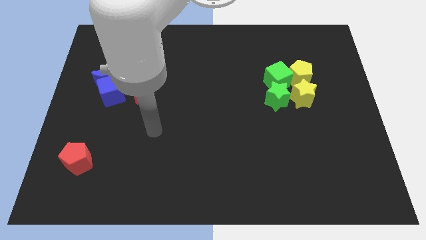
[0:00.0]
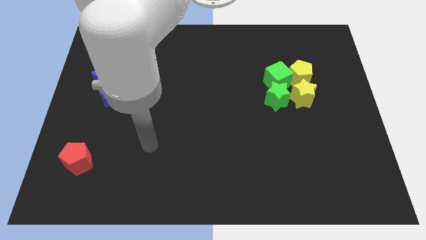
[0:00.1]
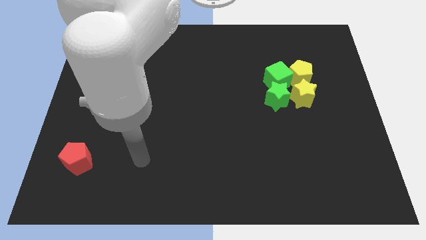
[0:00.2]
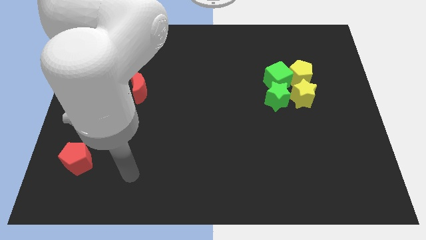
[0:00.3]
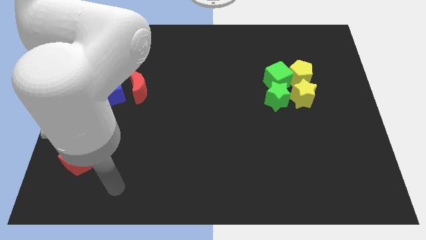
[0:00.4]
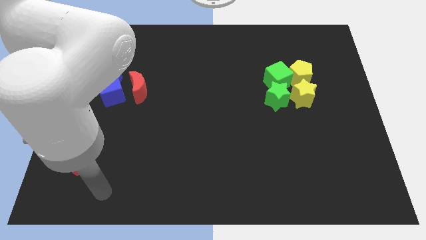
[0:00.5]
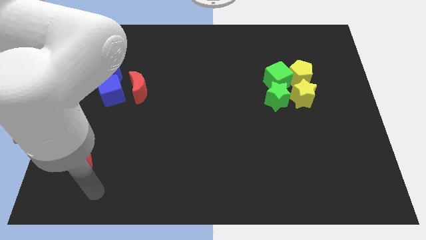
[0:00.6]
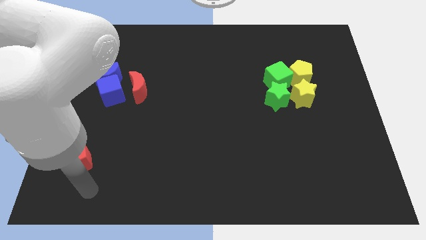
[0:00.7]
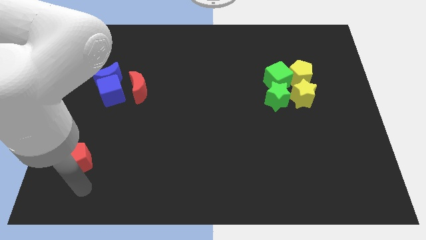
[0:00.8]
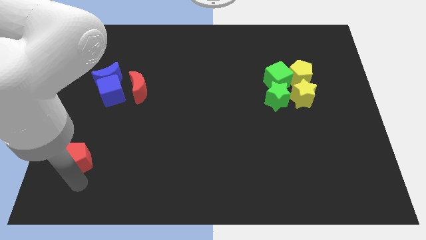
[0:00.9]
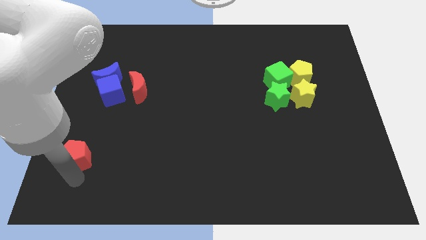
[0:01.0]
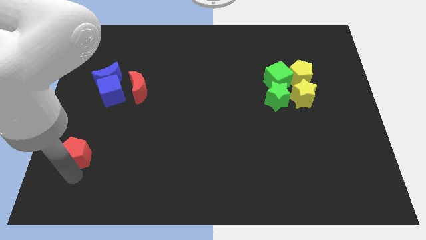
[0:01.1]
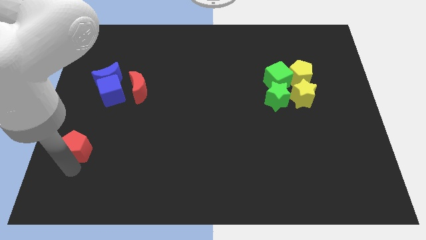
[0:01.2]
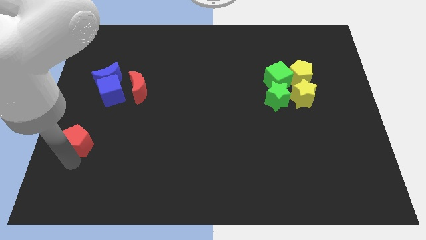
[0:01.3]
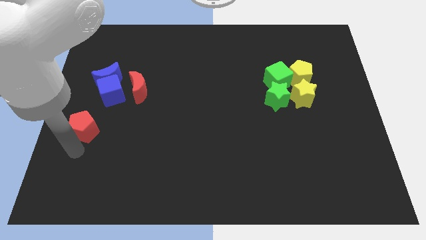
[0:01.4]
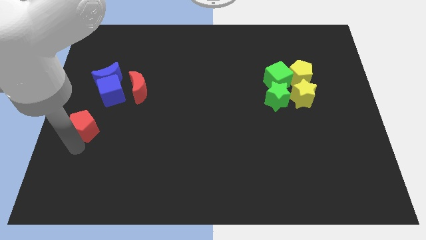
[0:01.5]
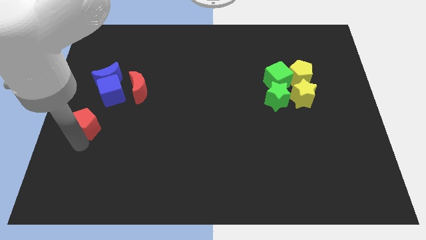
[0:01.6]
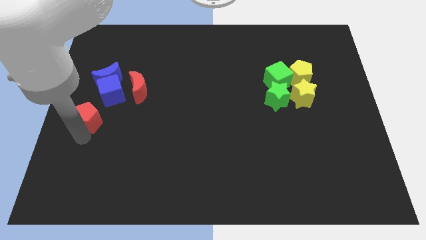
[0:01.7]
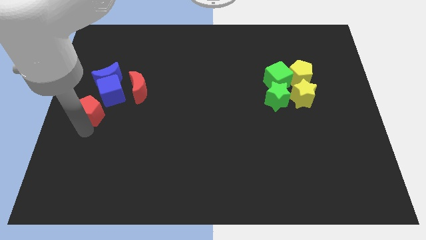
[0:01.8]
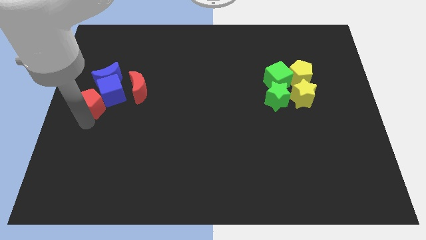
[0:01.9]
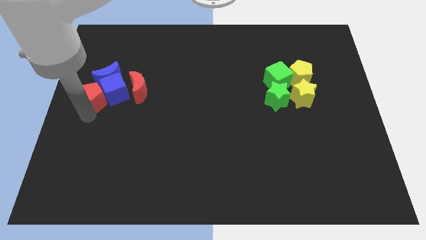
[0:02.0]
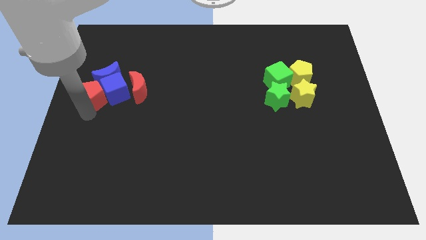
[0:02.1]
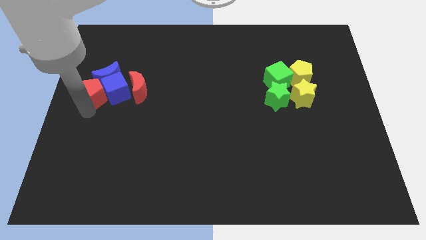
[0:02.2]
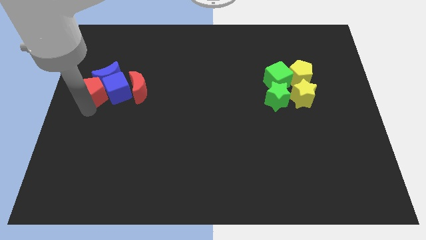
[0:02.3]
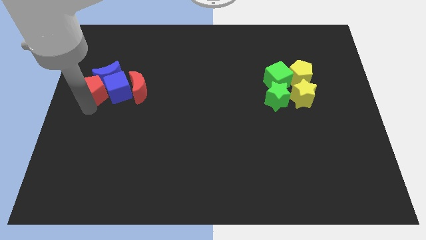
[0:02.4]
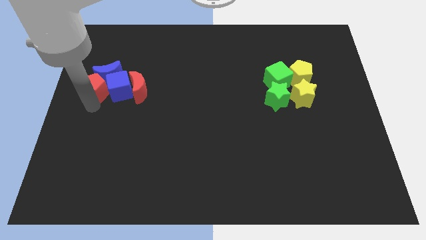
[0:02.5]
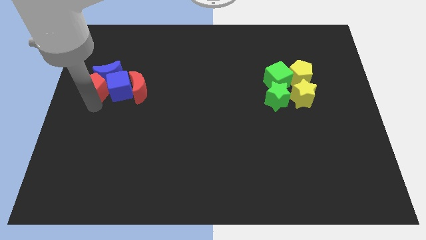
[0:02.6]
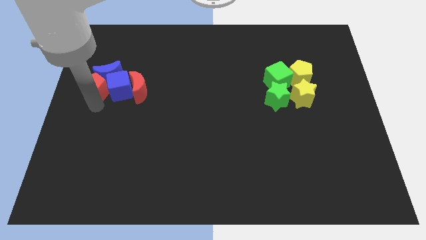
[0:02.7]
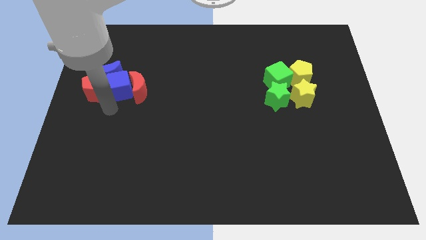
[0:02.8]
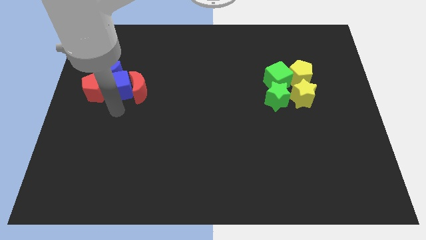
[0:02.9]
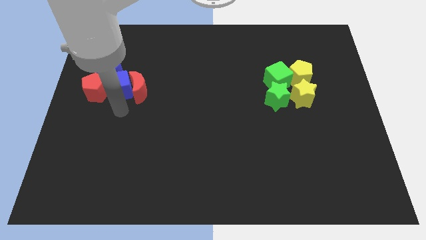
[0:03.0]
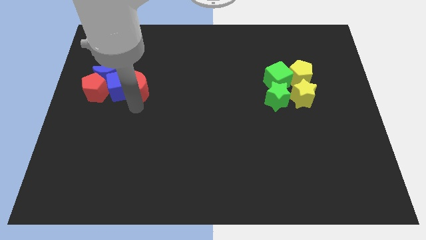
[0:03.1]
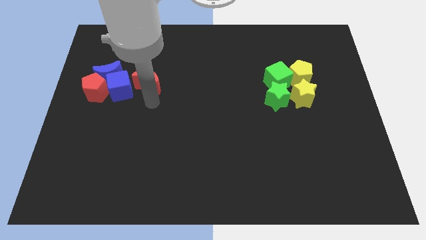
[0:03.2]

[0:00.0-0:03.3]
move the red pentagon to the left of the red moon

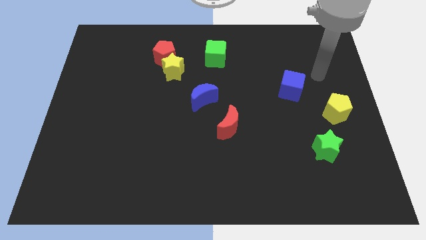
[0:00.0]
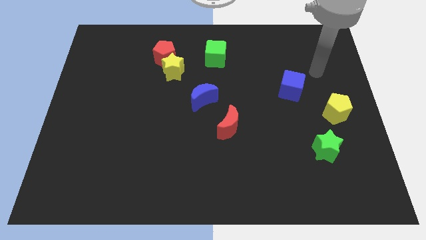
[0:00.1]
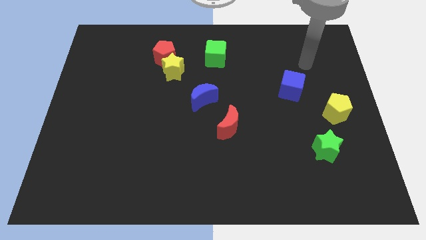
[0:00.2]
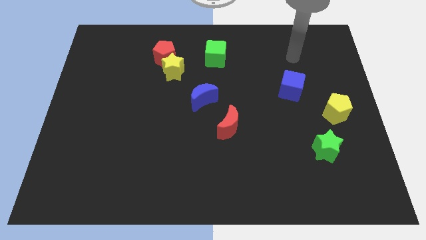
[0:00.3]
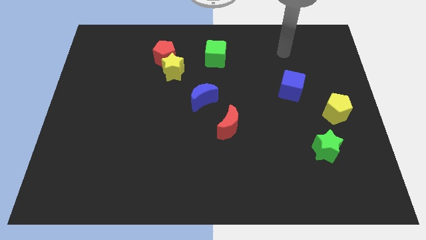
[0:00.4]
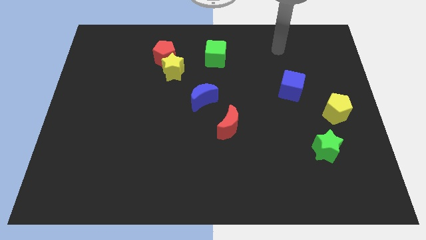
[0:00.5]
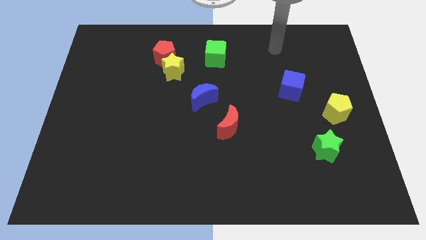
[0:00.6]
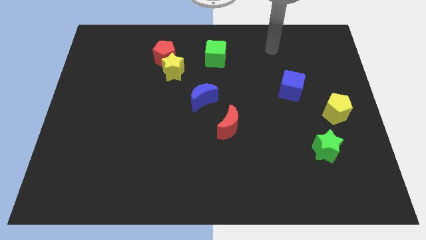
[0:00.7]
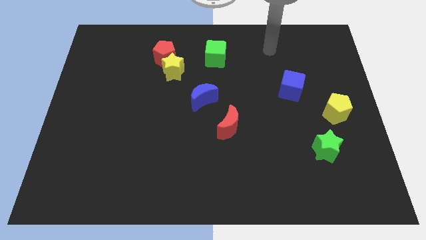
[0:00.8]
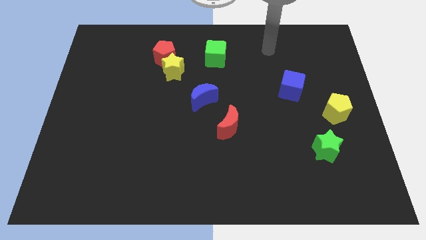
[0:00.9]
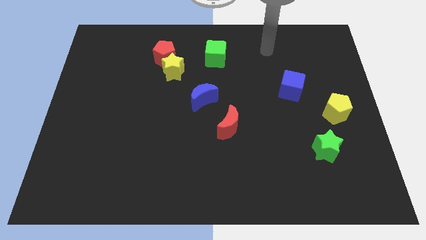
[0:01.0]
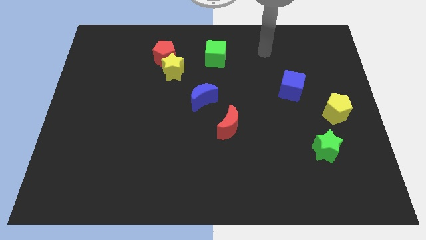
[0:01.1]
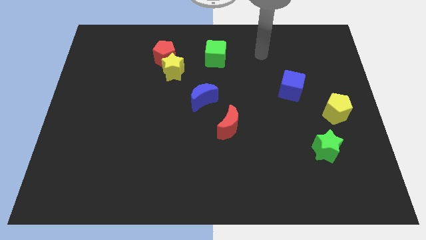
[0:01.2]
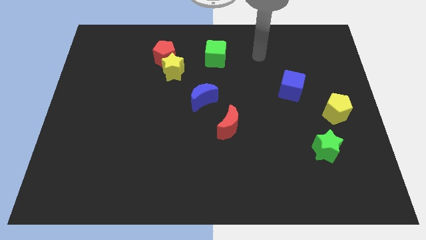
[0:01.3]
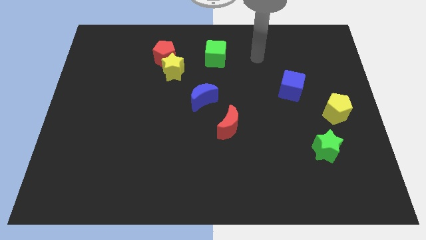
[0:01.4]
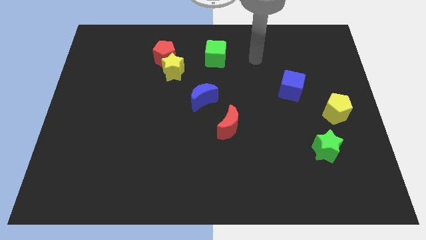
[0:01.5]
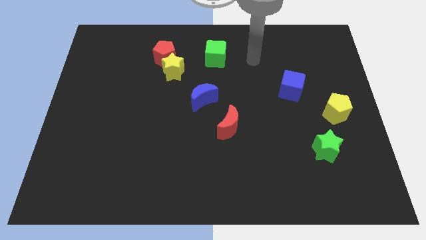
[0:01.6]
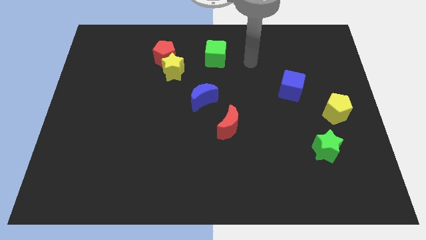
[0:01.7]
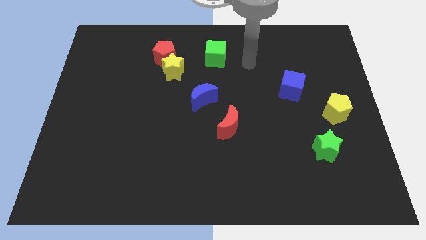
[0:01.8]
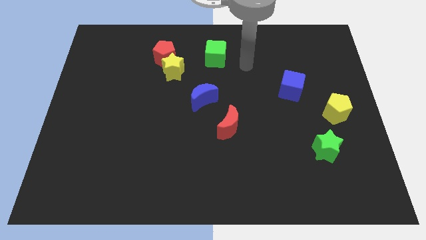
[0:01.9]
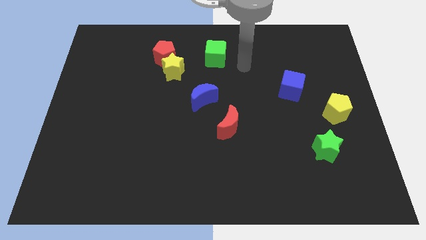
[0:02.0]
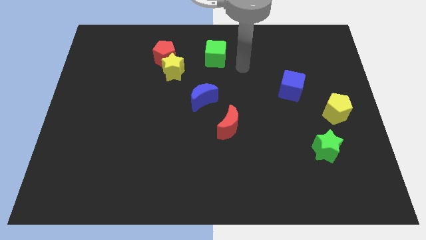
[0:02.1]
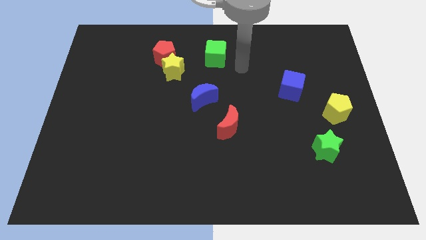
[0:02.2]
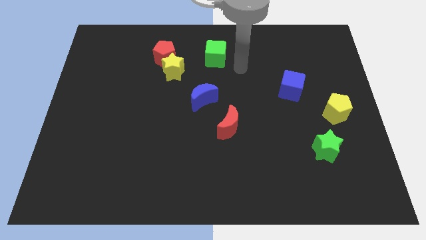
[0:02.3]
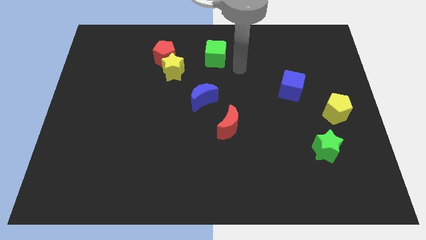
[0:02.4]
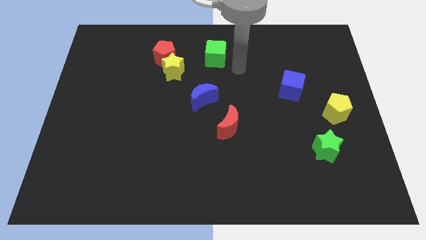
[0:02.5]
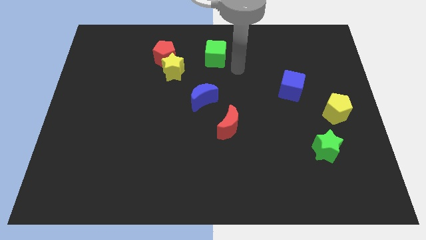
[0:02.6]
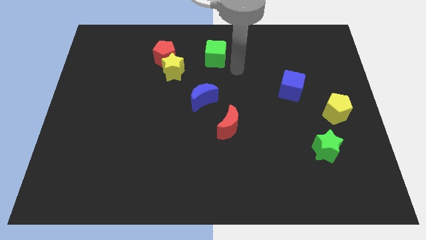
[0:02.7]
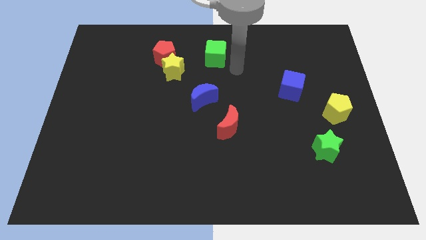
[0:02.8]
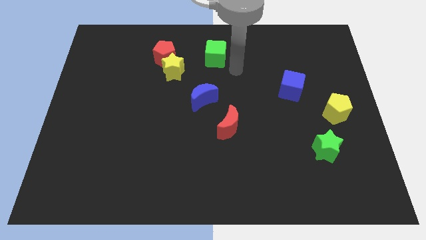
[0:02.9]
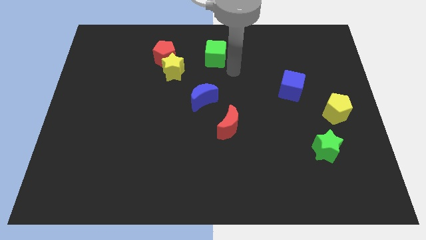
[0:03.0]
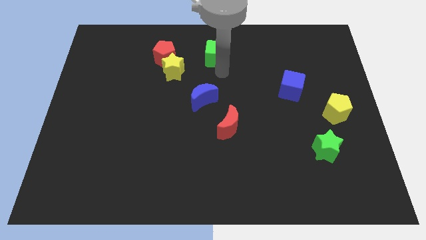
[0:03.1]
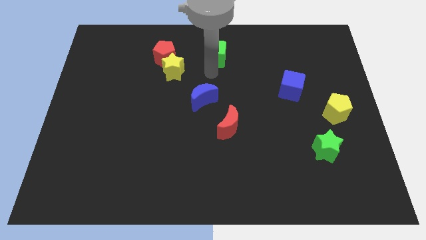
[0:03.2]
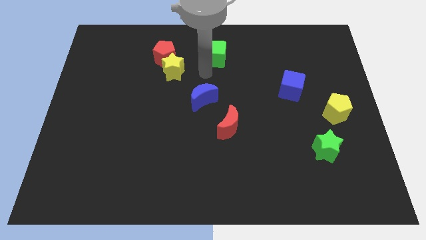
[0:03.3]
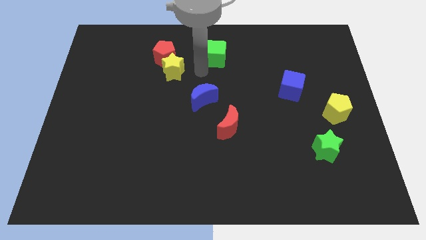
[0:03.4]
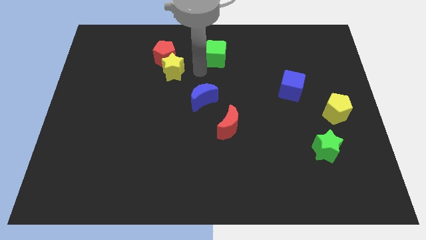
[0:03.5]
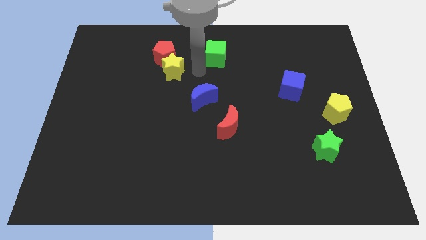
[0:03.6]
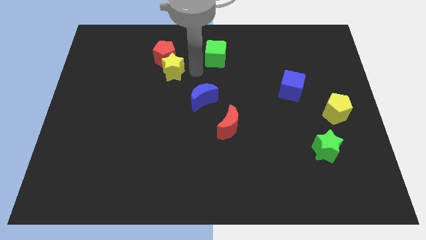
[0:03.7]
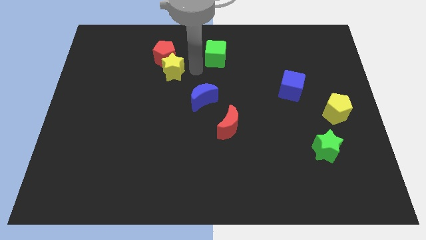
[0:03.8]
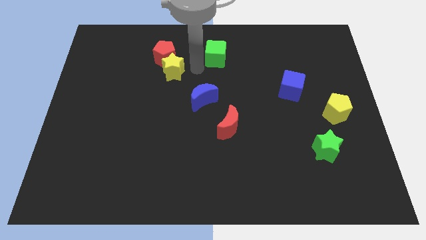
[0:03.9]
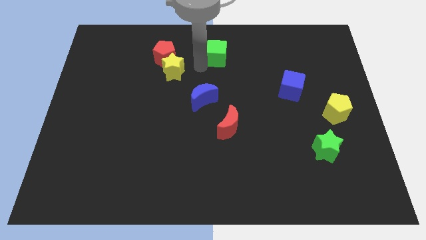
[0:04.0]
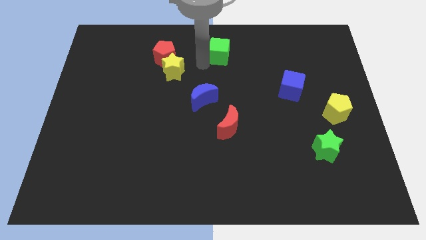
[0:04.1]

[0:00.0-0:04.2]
touch the bottom of the green cube

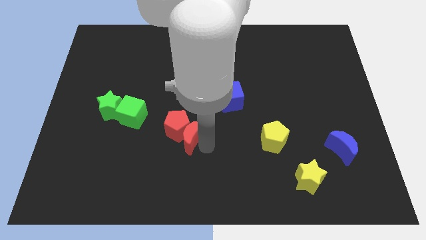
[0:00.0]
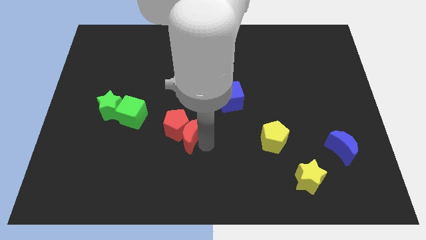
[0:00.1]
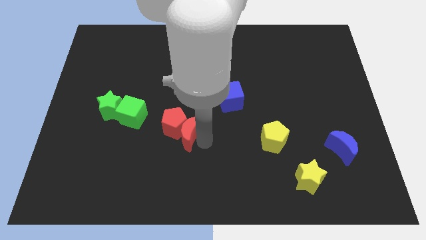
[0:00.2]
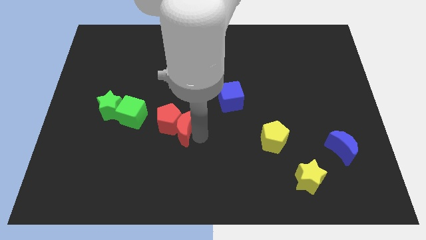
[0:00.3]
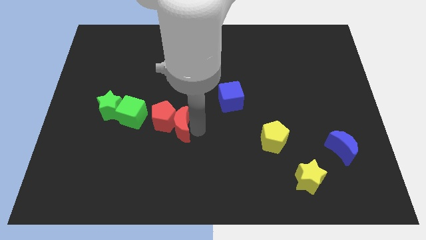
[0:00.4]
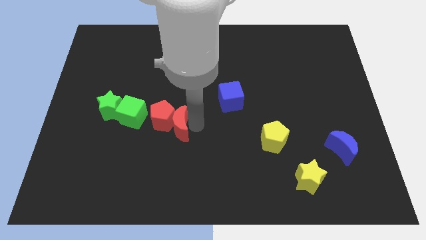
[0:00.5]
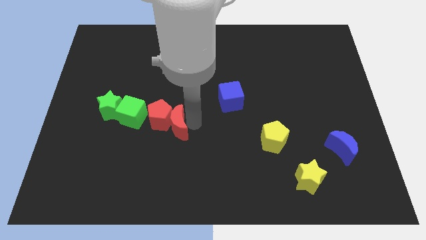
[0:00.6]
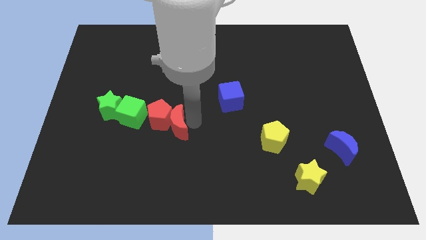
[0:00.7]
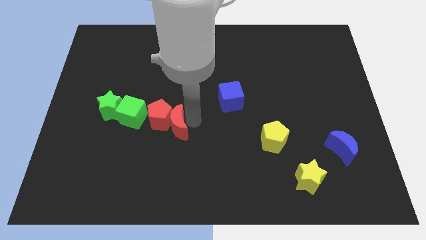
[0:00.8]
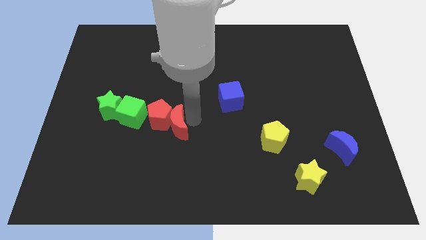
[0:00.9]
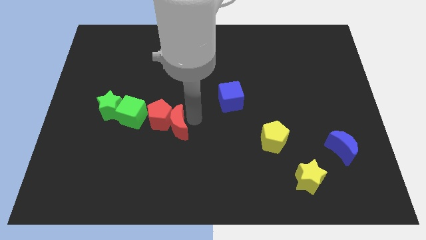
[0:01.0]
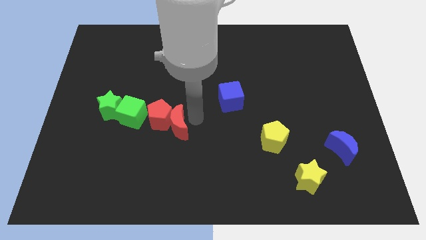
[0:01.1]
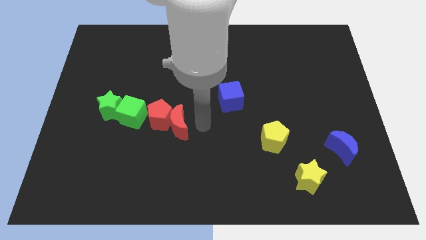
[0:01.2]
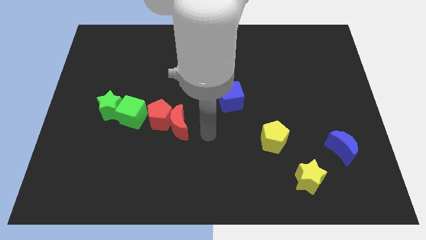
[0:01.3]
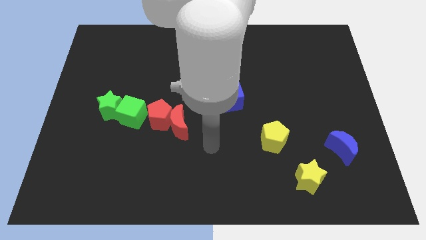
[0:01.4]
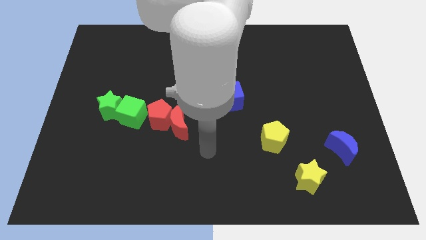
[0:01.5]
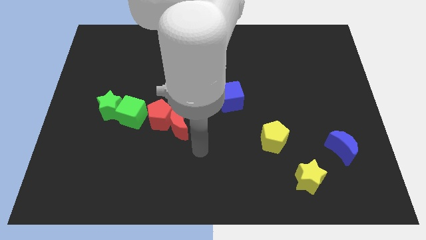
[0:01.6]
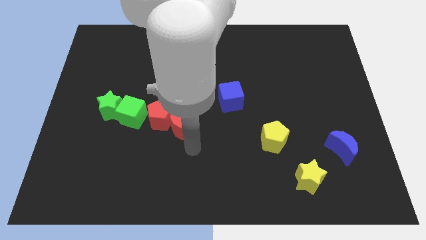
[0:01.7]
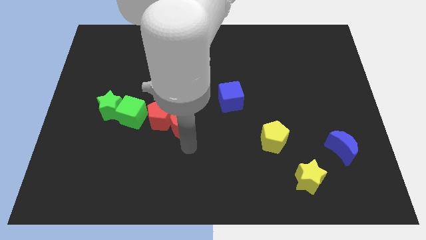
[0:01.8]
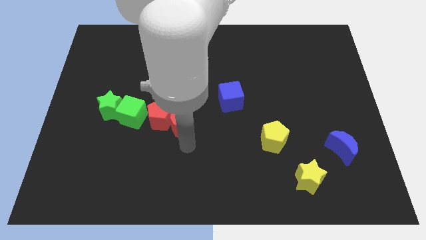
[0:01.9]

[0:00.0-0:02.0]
place the red blocks to right side of the green cube
